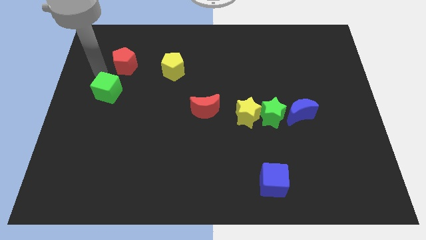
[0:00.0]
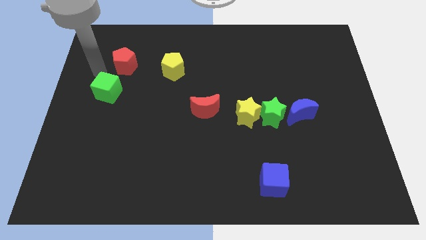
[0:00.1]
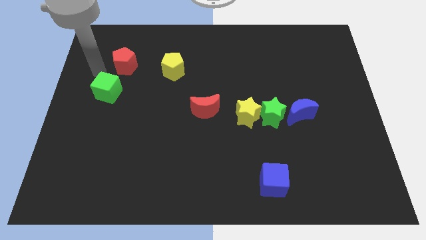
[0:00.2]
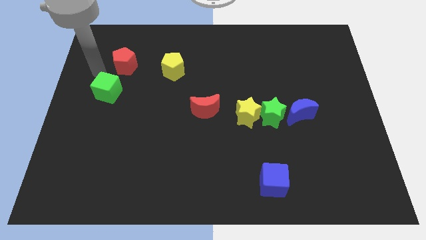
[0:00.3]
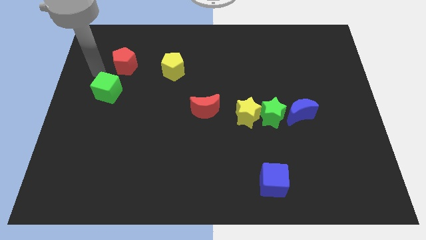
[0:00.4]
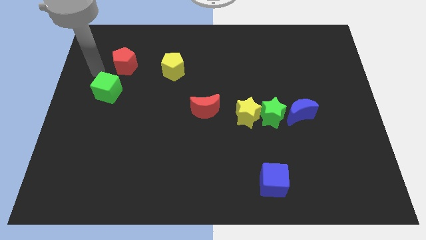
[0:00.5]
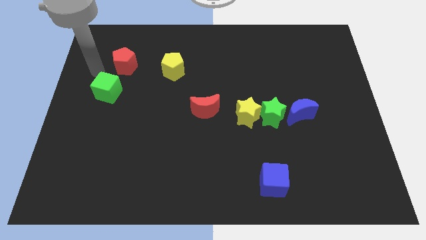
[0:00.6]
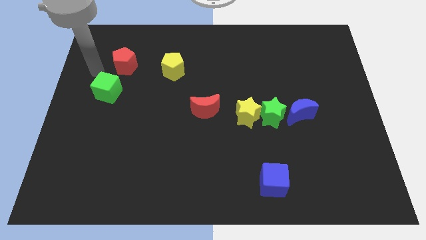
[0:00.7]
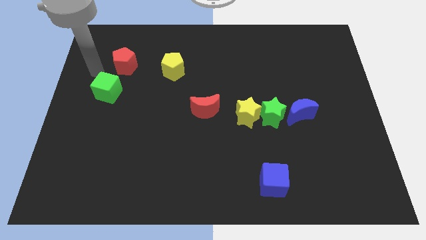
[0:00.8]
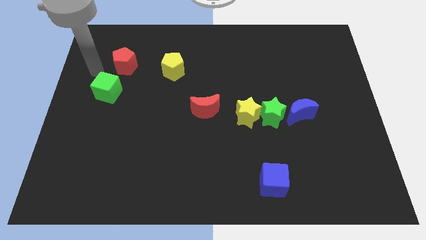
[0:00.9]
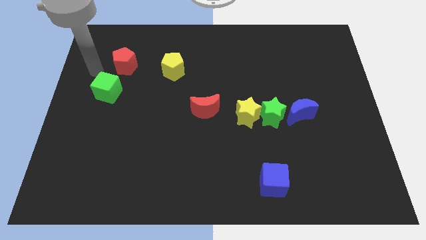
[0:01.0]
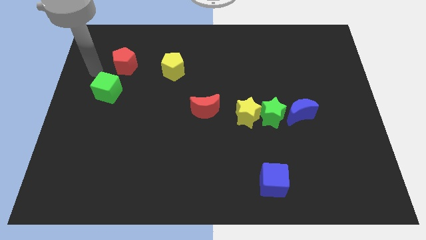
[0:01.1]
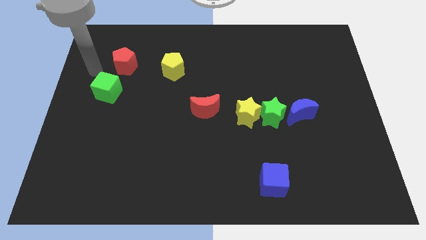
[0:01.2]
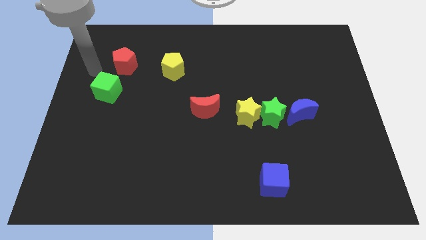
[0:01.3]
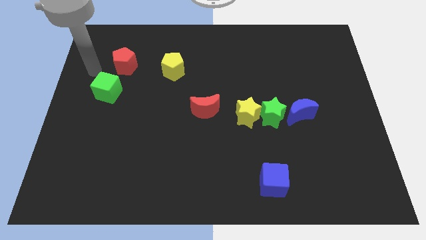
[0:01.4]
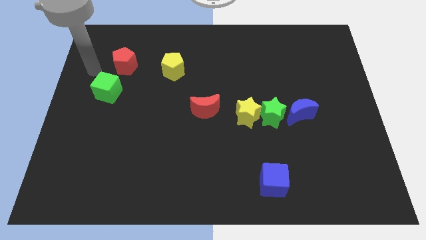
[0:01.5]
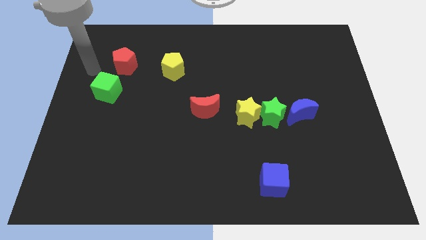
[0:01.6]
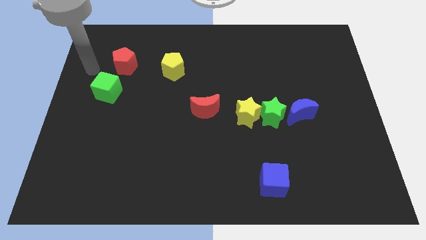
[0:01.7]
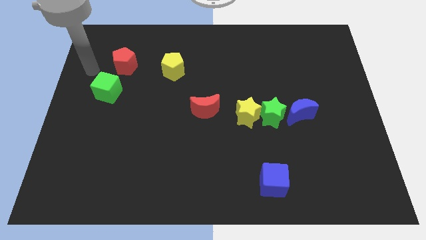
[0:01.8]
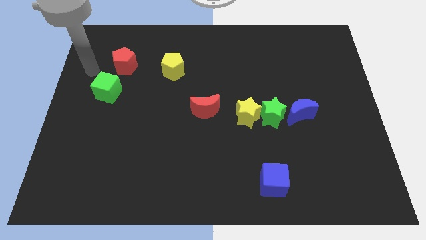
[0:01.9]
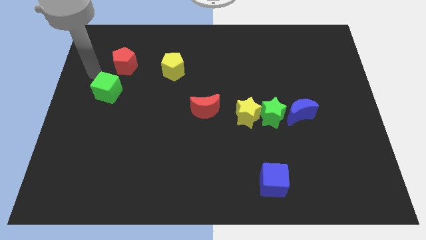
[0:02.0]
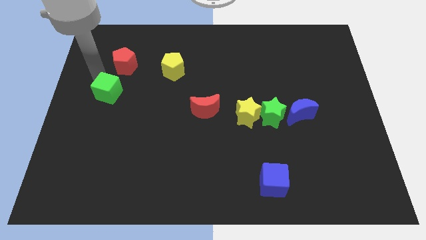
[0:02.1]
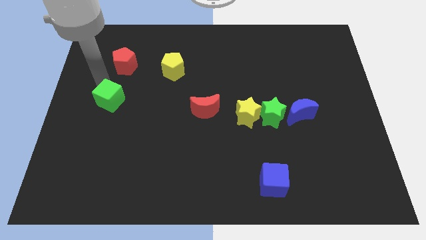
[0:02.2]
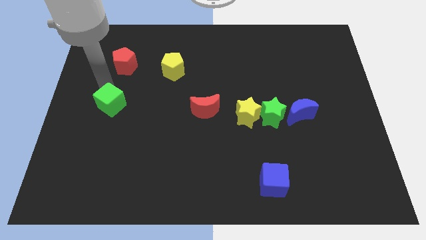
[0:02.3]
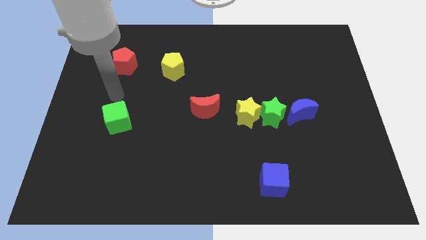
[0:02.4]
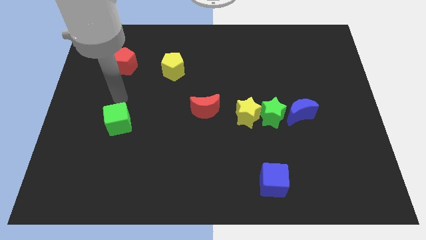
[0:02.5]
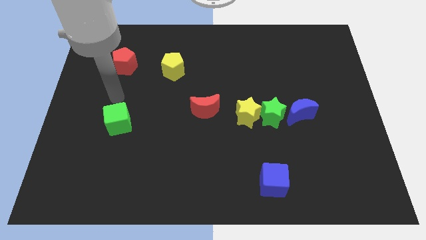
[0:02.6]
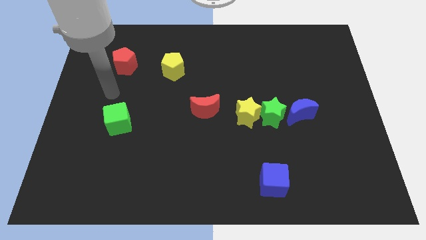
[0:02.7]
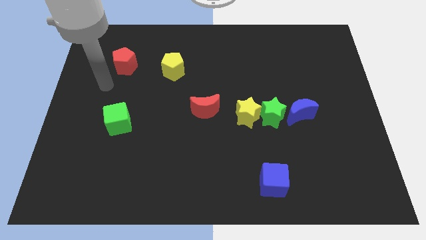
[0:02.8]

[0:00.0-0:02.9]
push the green cube downwards slightly

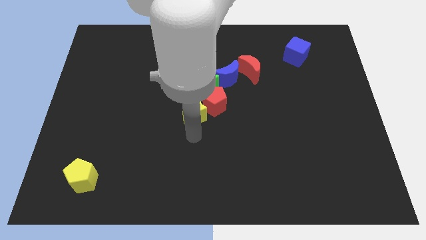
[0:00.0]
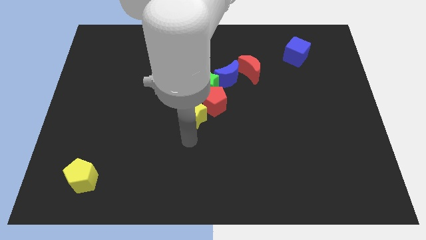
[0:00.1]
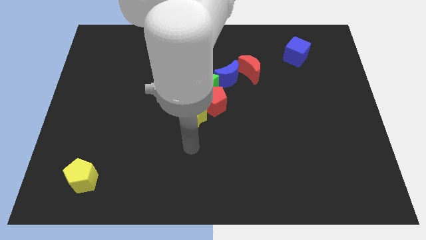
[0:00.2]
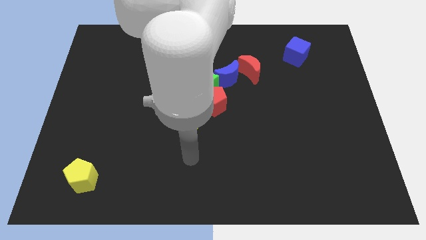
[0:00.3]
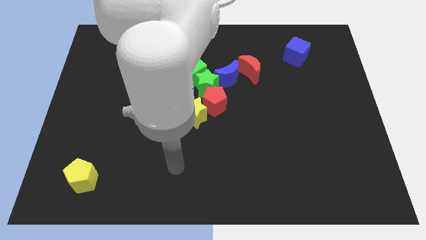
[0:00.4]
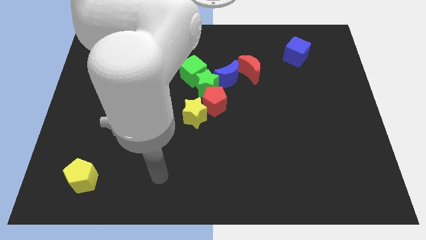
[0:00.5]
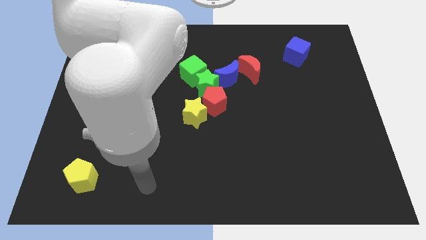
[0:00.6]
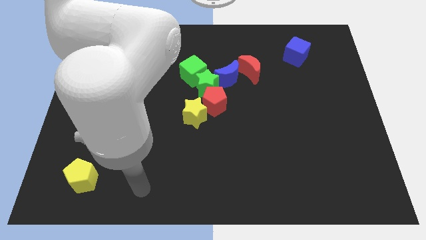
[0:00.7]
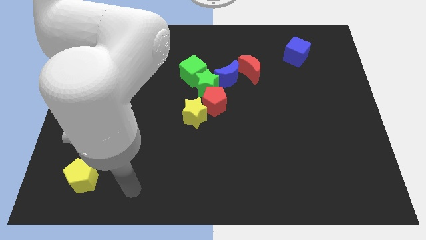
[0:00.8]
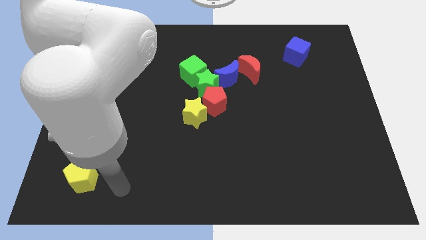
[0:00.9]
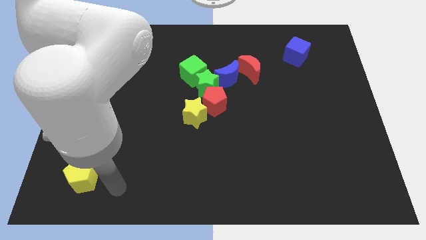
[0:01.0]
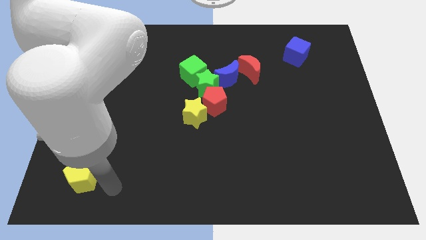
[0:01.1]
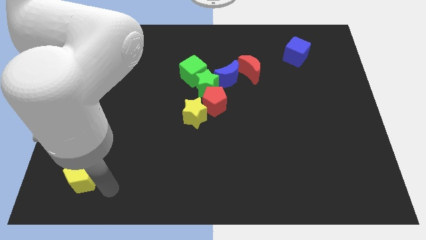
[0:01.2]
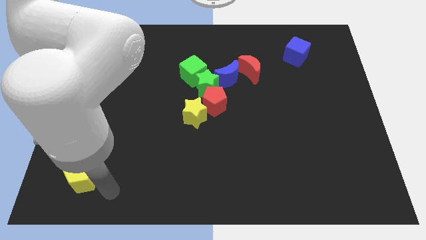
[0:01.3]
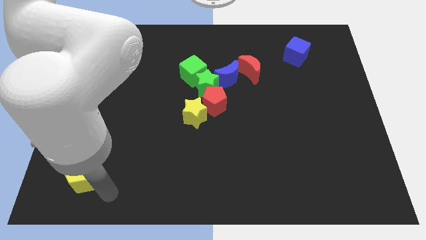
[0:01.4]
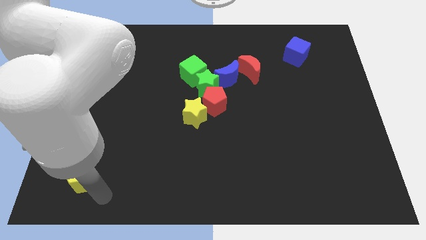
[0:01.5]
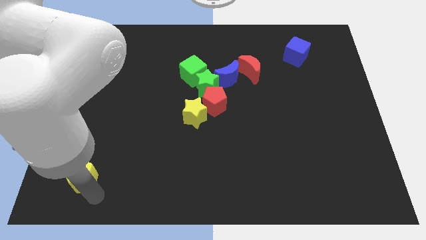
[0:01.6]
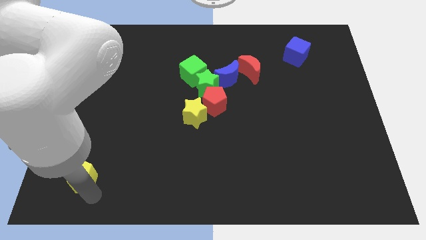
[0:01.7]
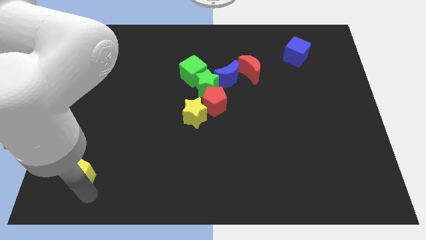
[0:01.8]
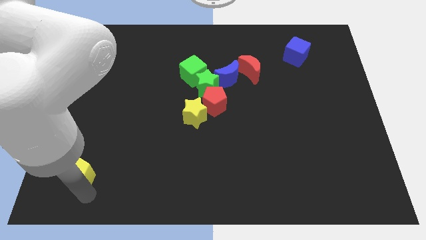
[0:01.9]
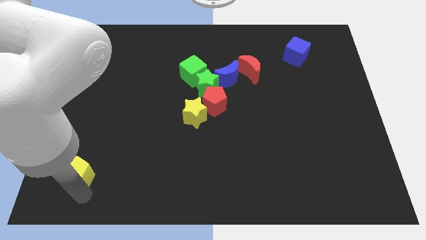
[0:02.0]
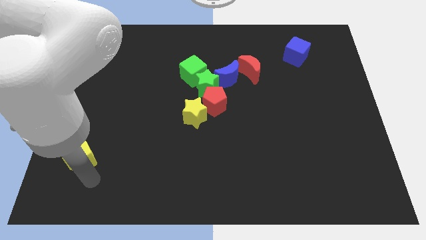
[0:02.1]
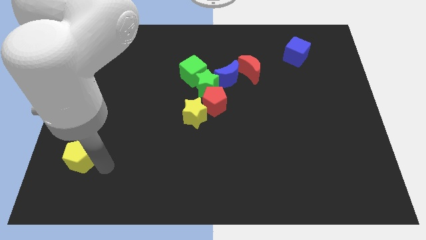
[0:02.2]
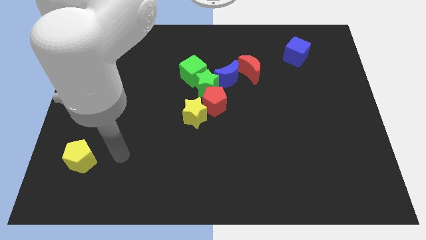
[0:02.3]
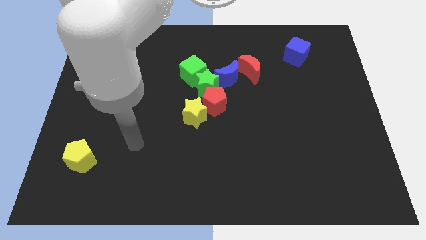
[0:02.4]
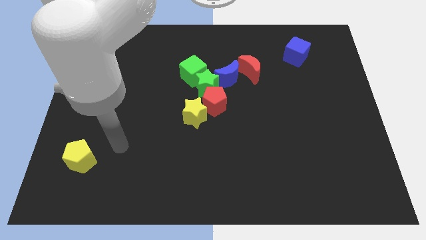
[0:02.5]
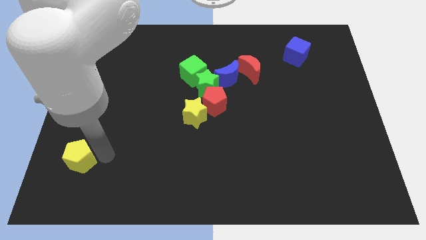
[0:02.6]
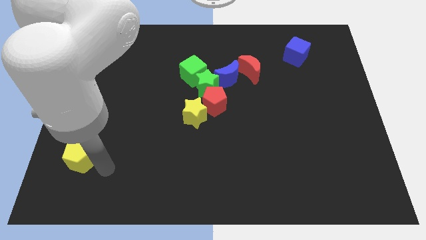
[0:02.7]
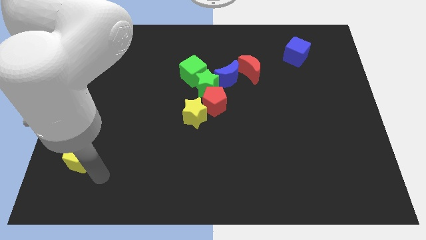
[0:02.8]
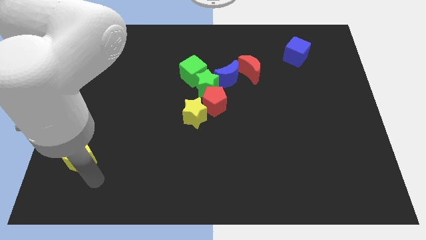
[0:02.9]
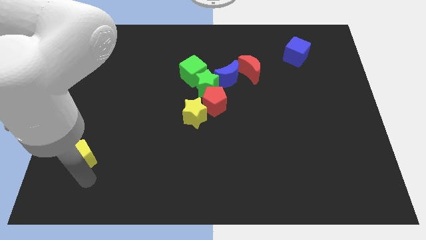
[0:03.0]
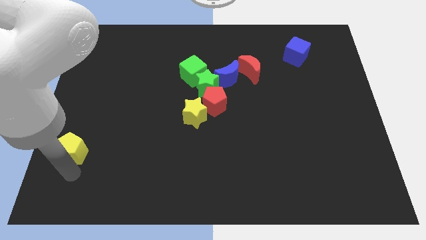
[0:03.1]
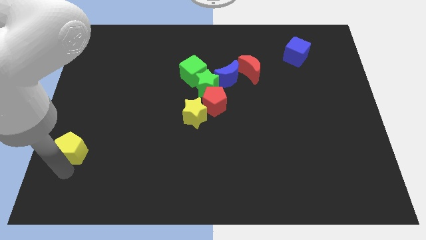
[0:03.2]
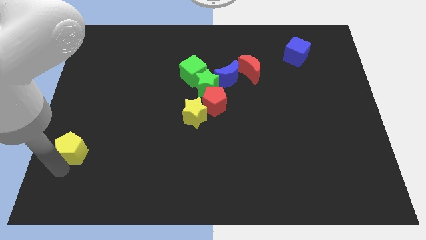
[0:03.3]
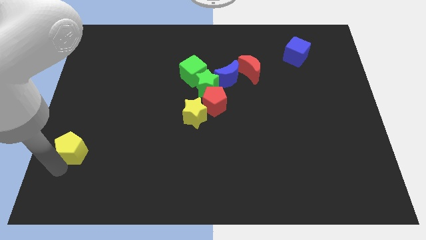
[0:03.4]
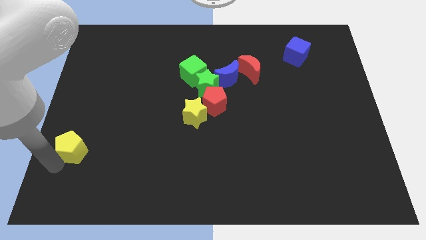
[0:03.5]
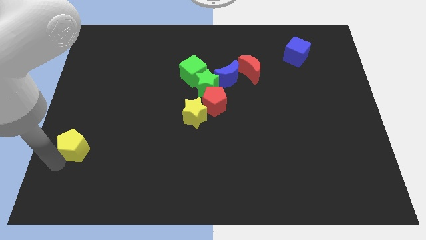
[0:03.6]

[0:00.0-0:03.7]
push the yellow pentagon upward

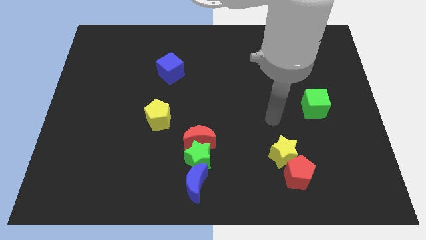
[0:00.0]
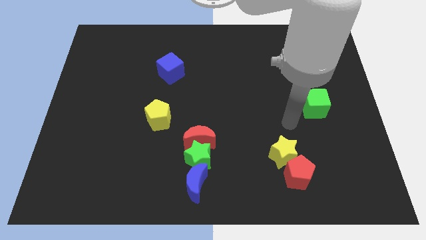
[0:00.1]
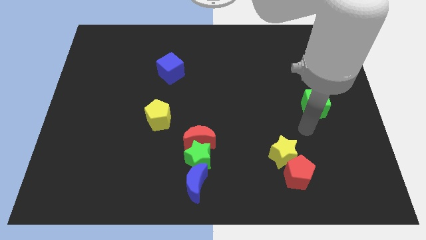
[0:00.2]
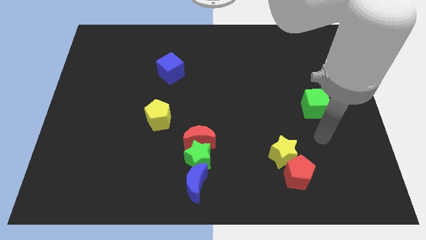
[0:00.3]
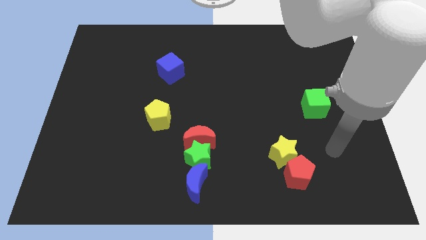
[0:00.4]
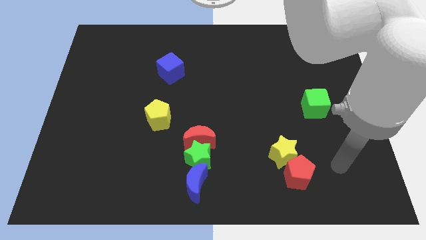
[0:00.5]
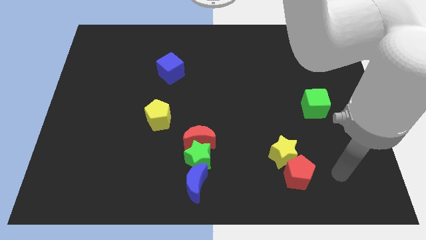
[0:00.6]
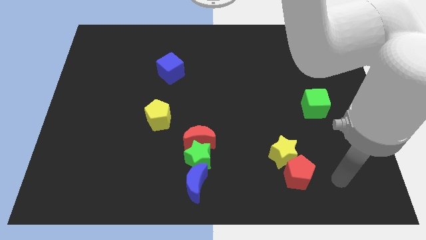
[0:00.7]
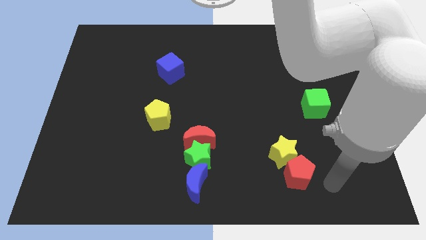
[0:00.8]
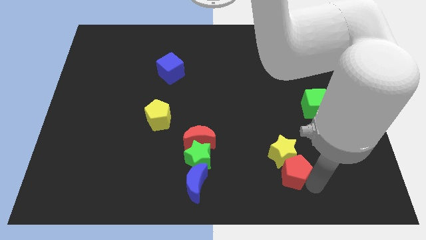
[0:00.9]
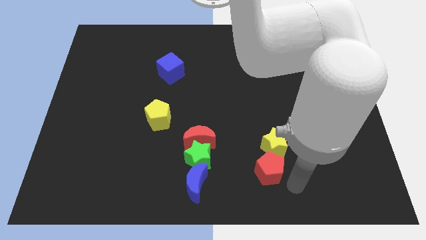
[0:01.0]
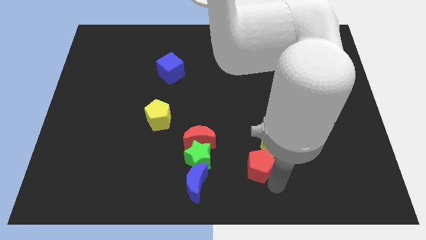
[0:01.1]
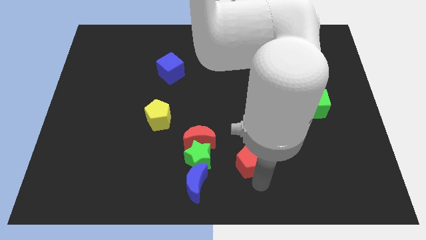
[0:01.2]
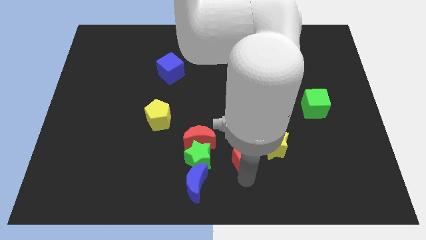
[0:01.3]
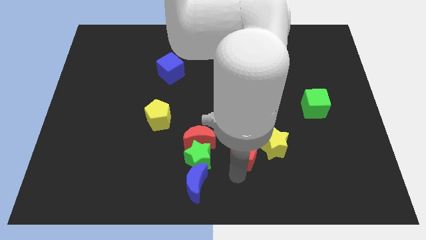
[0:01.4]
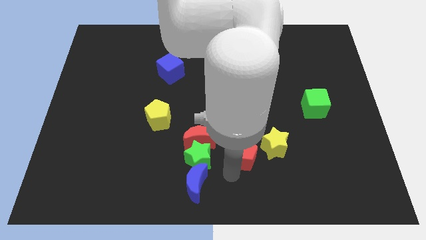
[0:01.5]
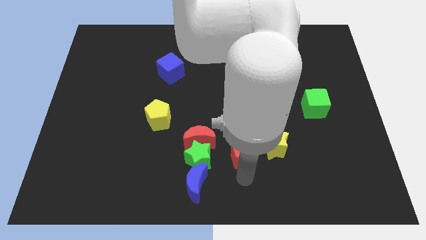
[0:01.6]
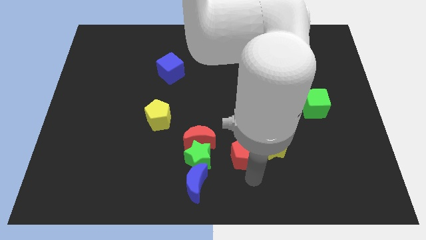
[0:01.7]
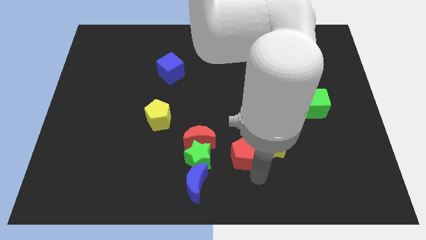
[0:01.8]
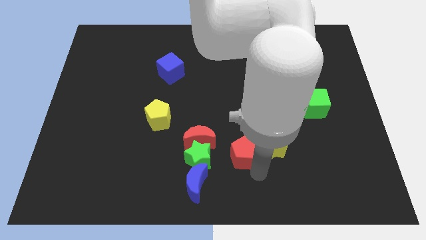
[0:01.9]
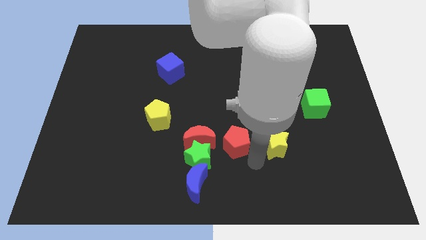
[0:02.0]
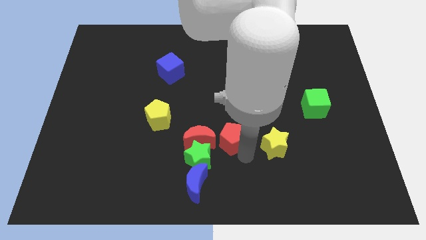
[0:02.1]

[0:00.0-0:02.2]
place the red pentagon to the right of the red moon
